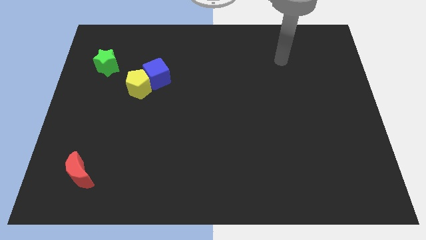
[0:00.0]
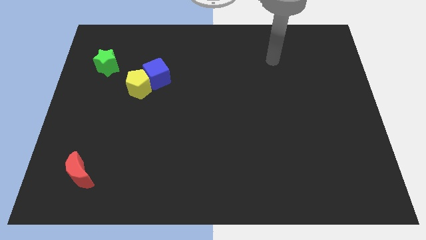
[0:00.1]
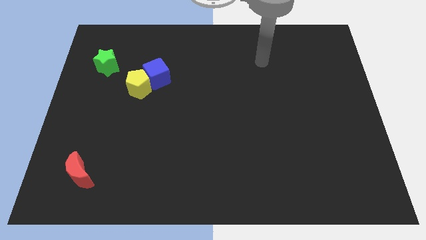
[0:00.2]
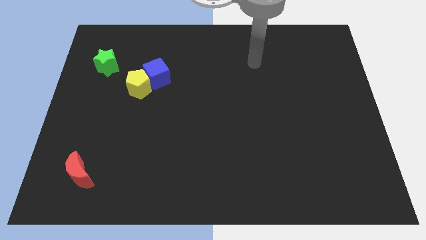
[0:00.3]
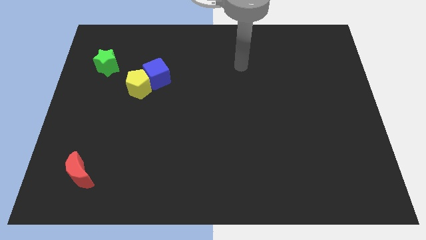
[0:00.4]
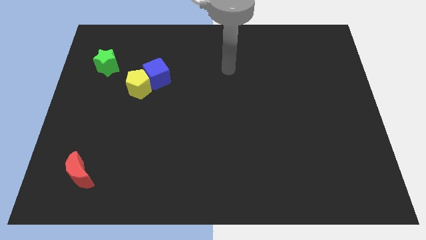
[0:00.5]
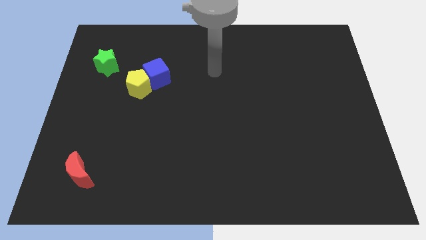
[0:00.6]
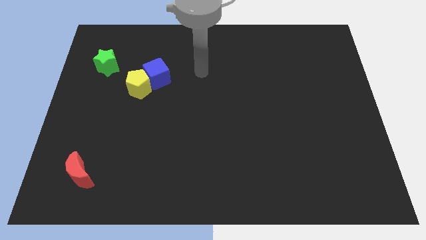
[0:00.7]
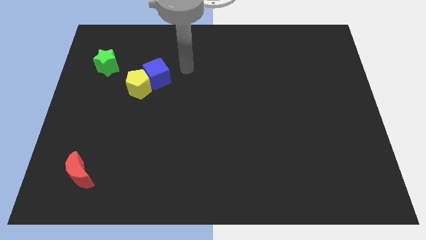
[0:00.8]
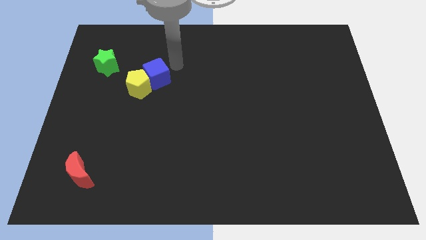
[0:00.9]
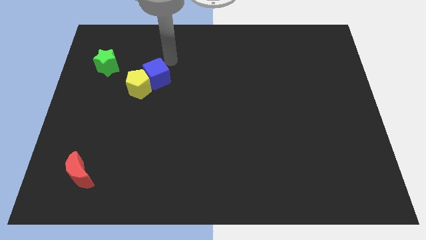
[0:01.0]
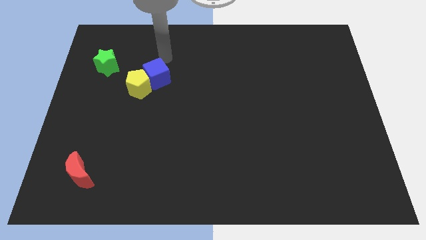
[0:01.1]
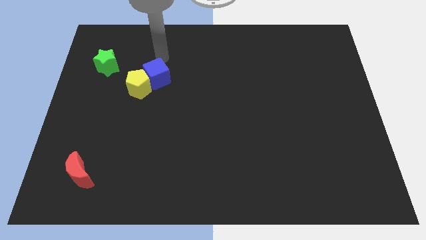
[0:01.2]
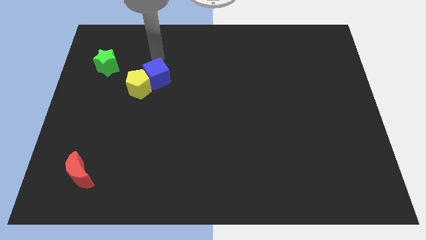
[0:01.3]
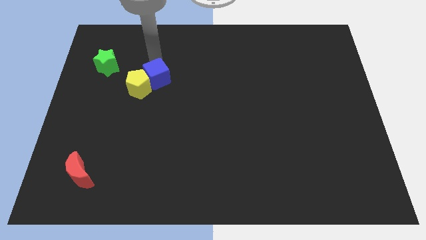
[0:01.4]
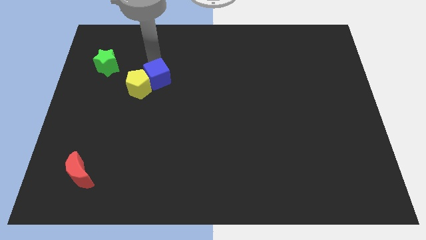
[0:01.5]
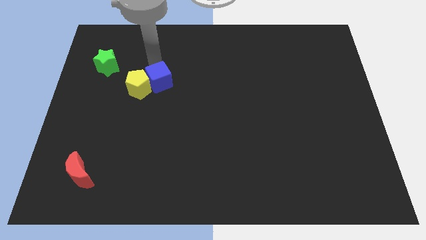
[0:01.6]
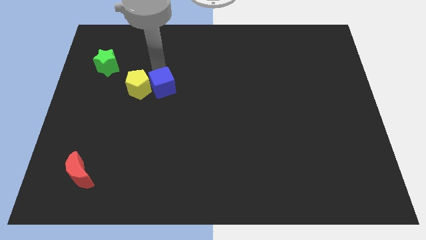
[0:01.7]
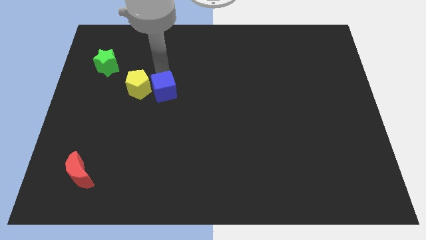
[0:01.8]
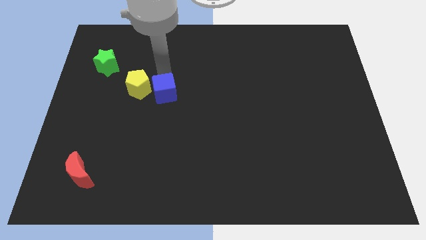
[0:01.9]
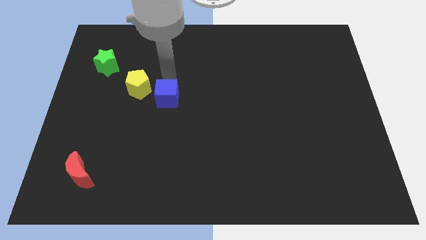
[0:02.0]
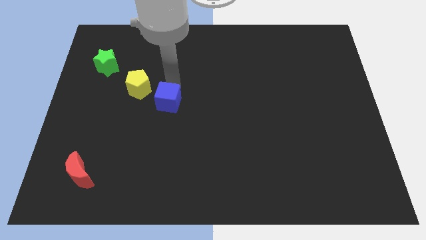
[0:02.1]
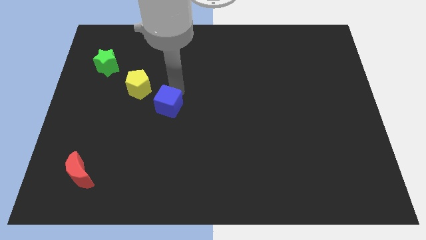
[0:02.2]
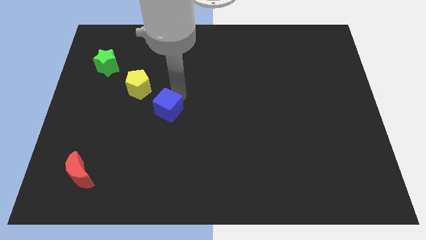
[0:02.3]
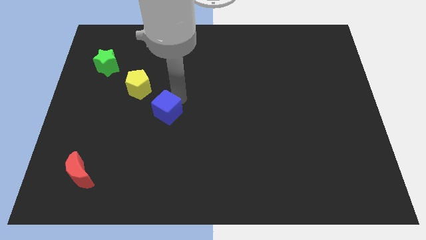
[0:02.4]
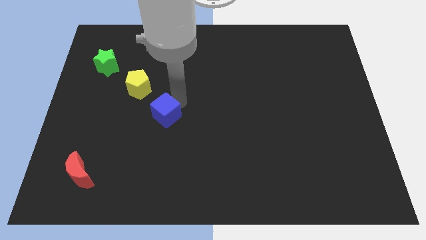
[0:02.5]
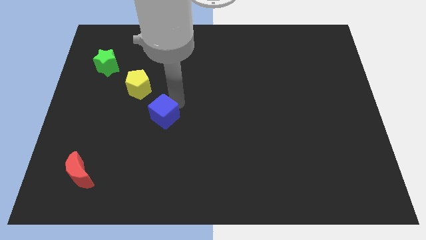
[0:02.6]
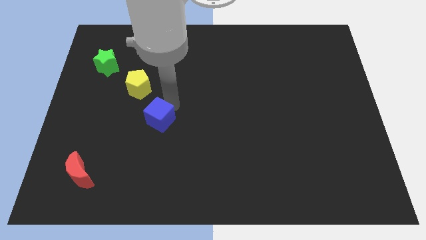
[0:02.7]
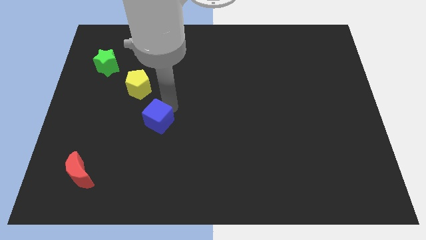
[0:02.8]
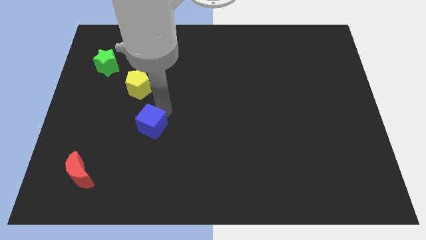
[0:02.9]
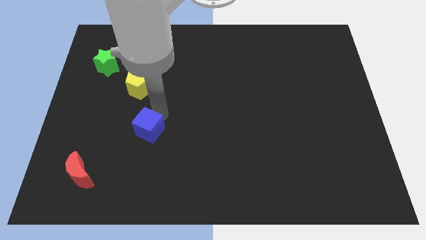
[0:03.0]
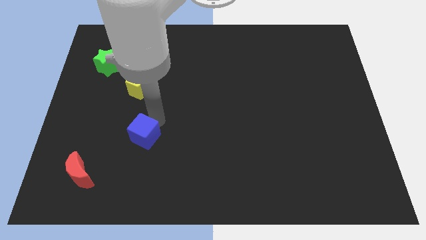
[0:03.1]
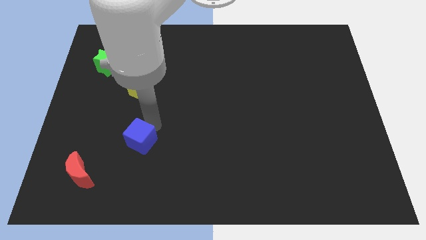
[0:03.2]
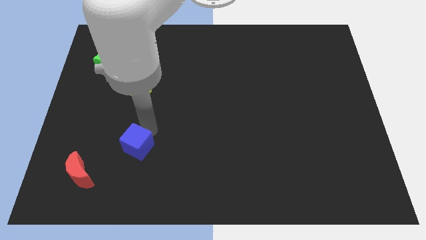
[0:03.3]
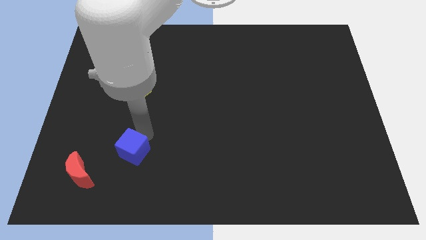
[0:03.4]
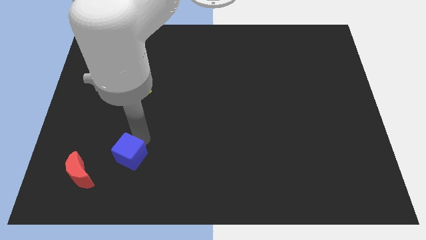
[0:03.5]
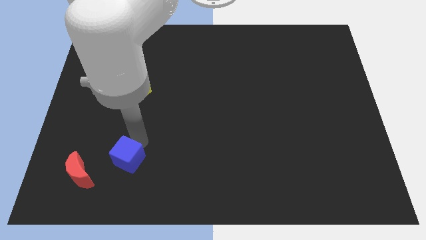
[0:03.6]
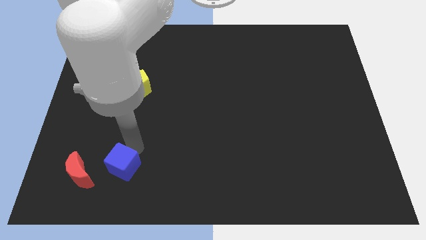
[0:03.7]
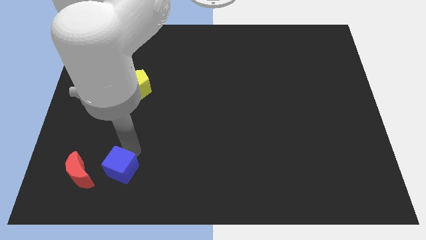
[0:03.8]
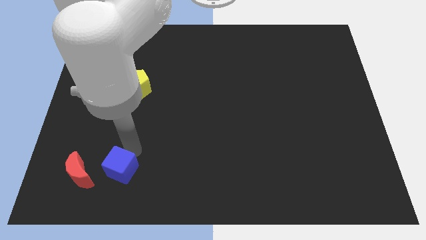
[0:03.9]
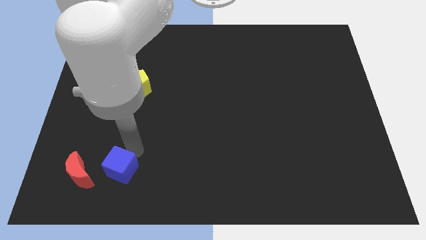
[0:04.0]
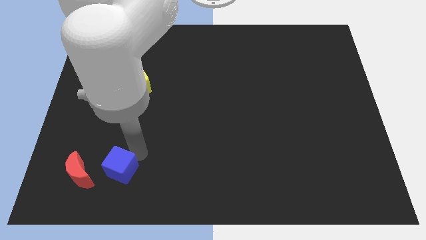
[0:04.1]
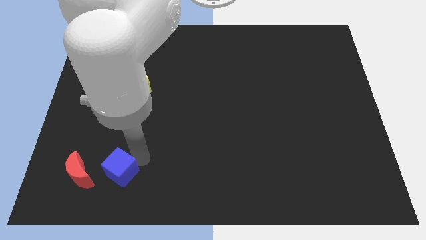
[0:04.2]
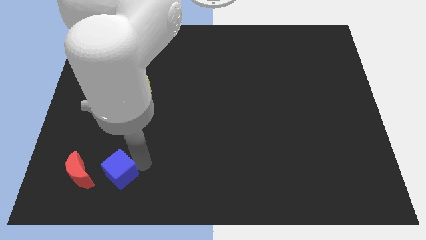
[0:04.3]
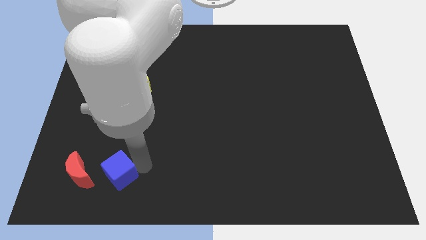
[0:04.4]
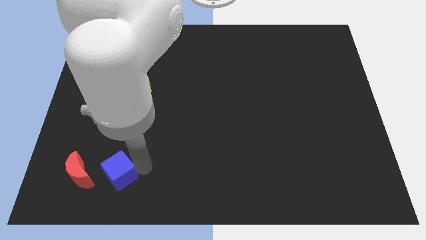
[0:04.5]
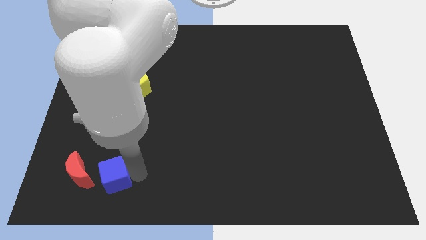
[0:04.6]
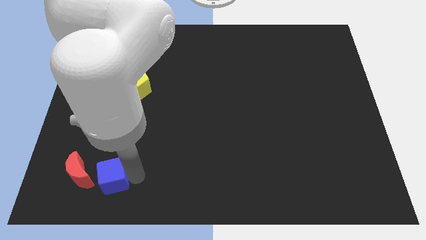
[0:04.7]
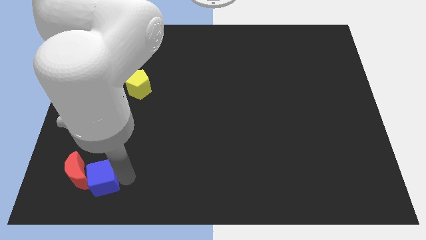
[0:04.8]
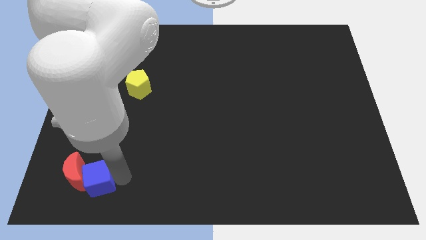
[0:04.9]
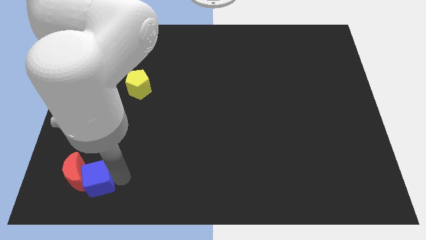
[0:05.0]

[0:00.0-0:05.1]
move the blue cube to the red moon

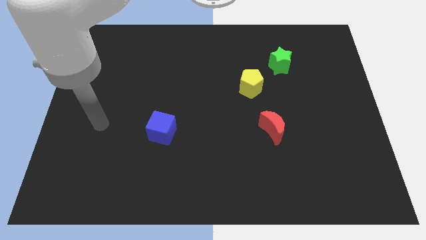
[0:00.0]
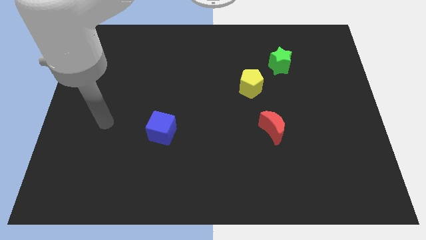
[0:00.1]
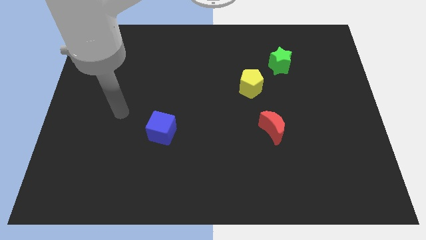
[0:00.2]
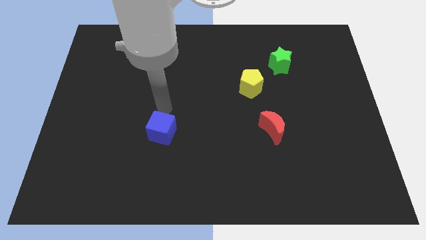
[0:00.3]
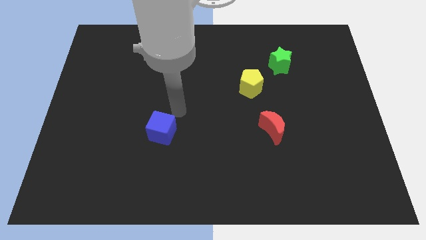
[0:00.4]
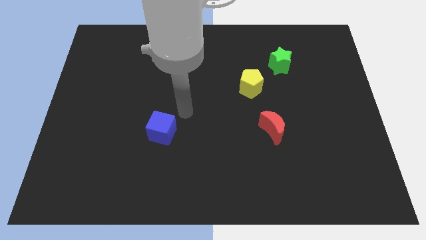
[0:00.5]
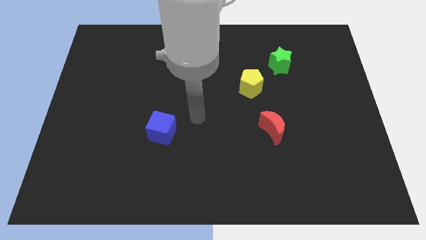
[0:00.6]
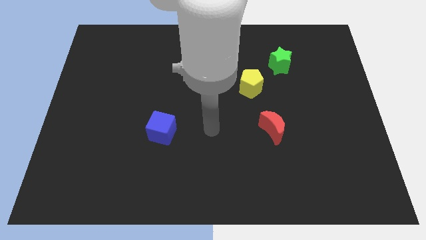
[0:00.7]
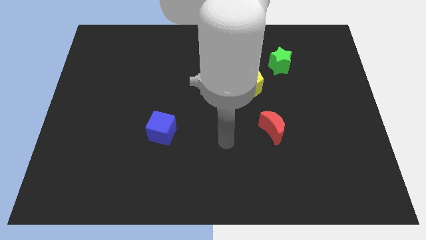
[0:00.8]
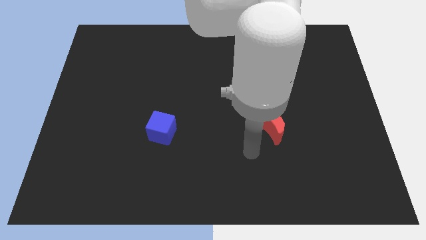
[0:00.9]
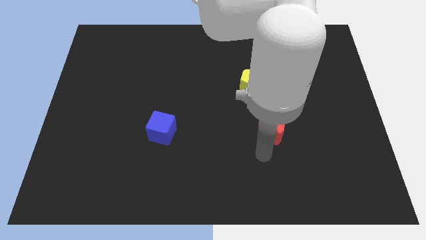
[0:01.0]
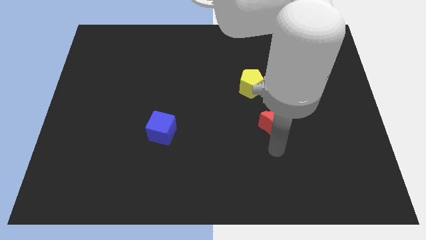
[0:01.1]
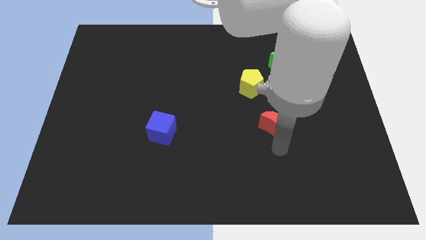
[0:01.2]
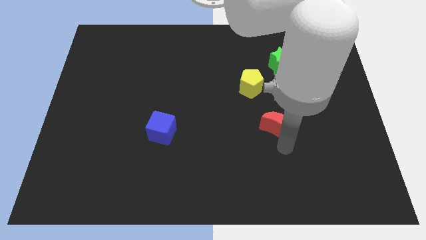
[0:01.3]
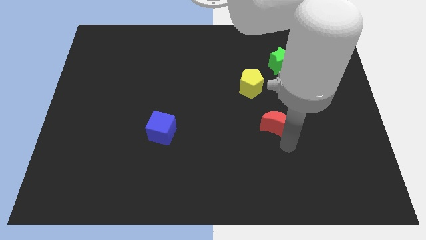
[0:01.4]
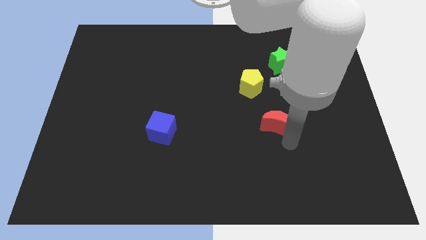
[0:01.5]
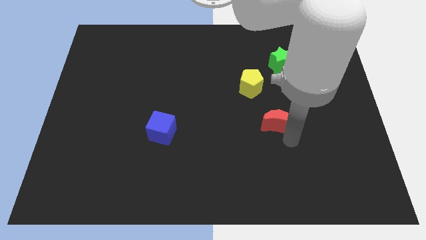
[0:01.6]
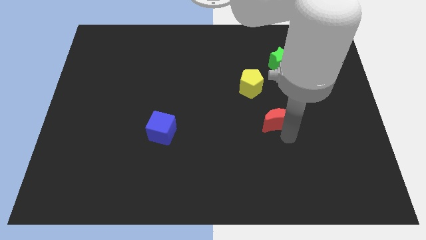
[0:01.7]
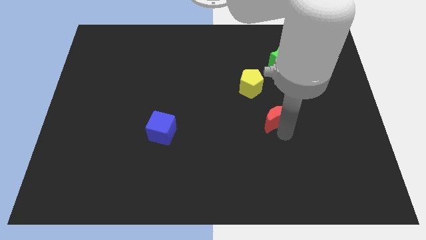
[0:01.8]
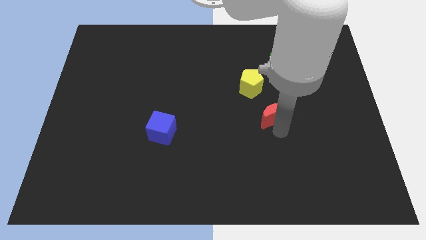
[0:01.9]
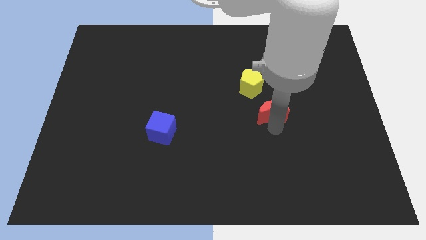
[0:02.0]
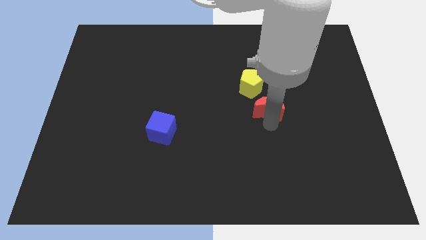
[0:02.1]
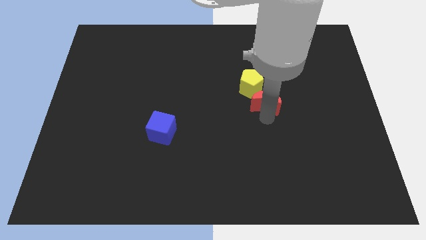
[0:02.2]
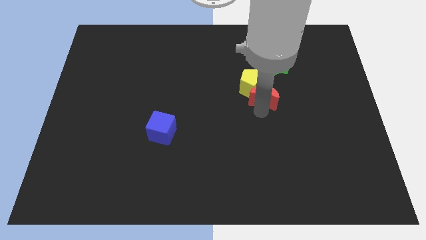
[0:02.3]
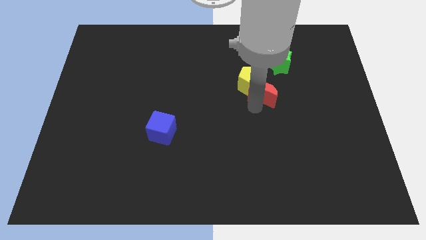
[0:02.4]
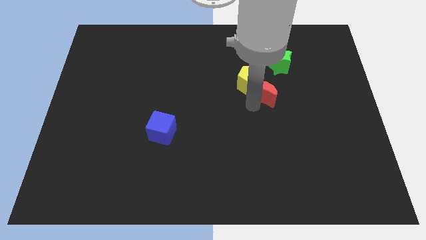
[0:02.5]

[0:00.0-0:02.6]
put the moon close to the pentagon

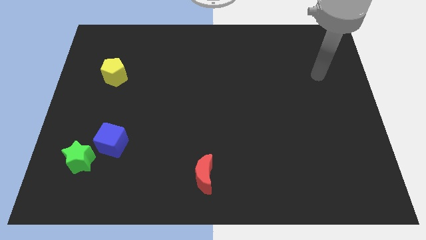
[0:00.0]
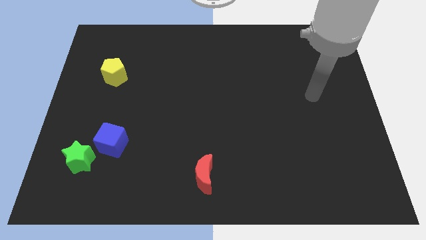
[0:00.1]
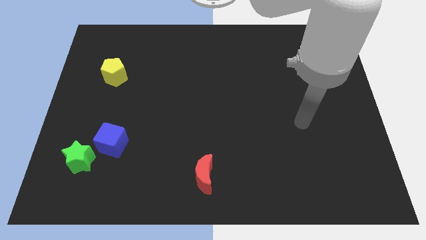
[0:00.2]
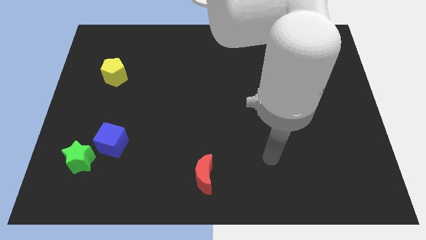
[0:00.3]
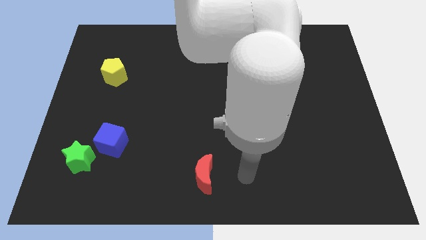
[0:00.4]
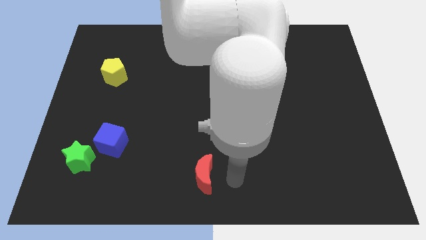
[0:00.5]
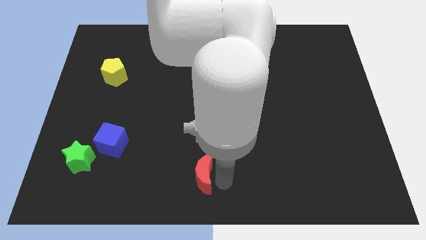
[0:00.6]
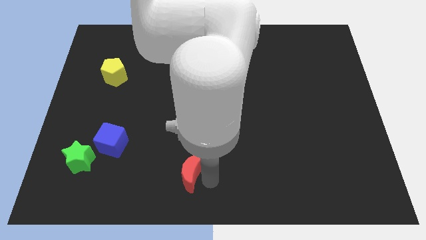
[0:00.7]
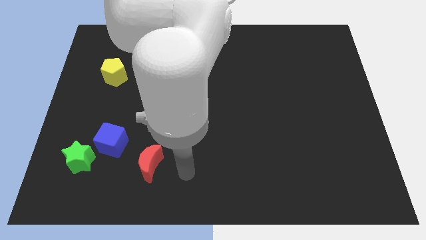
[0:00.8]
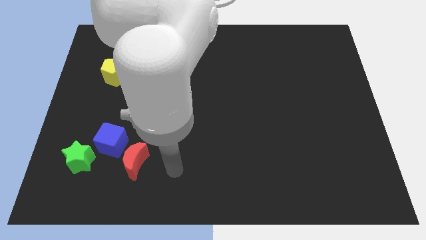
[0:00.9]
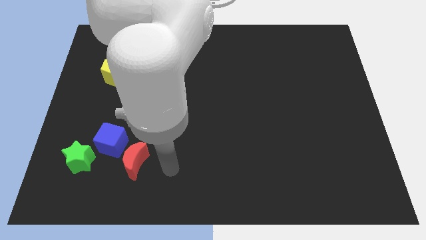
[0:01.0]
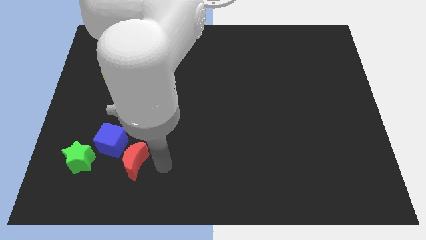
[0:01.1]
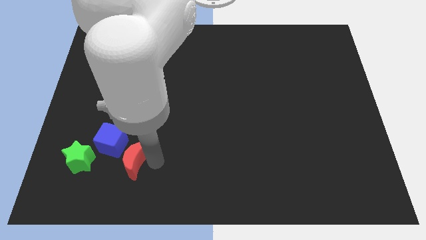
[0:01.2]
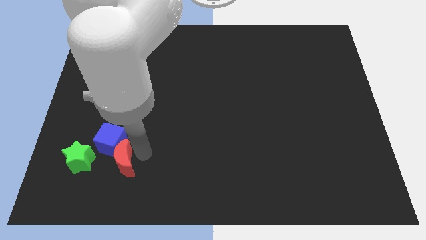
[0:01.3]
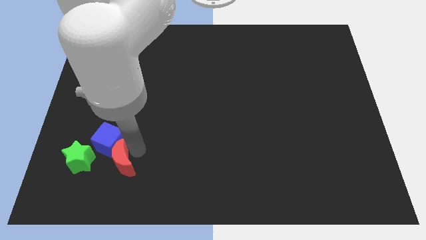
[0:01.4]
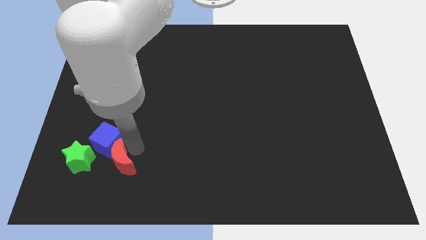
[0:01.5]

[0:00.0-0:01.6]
move the red block close to the cube
